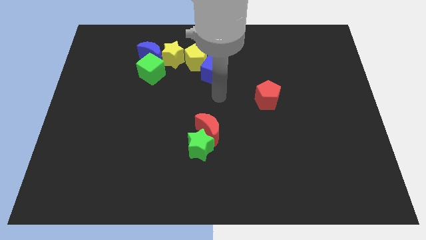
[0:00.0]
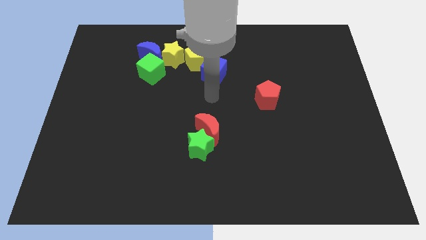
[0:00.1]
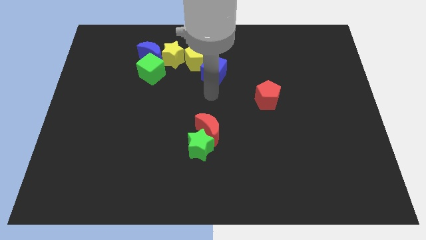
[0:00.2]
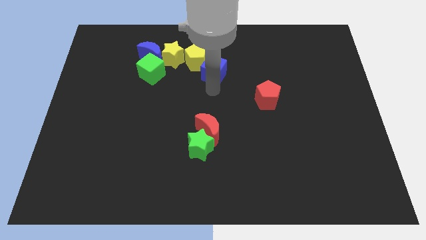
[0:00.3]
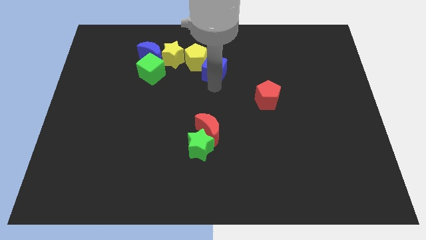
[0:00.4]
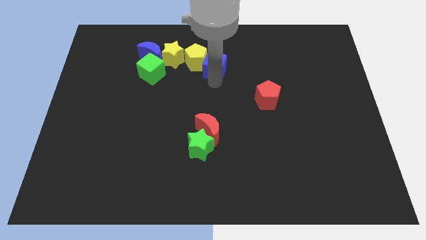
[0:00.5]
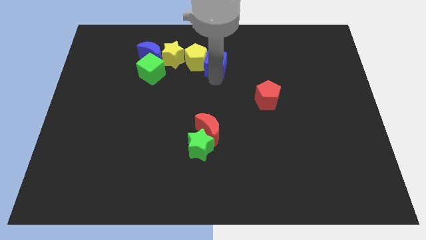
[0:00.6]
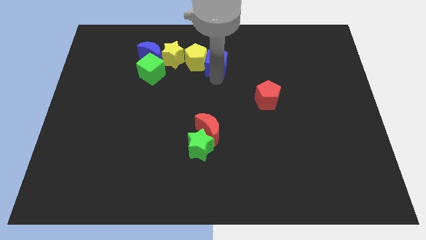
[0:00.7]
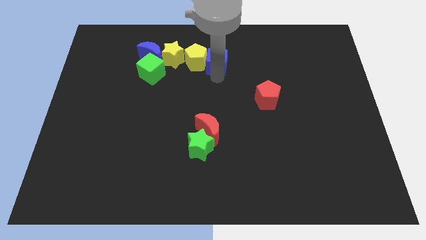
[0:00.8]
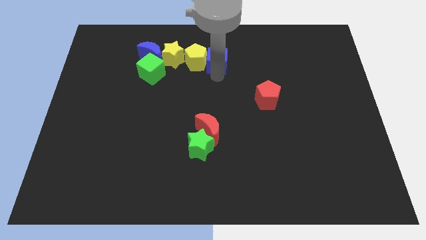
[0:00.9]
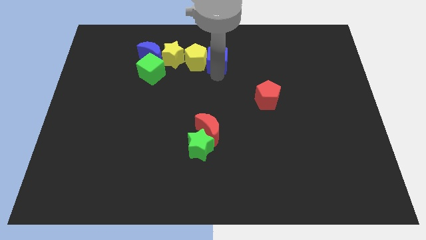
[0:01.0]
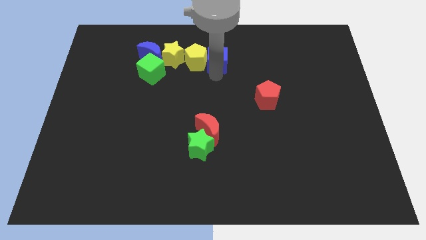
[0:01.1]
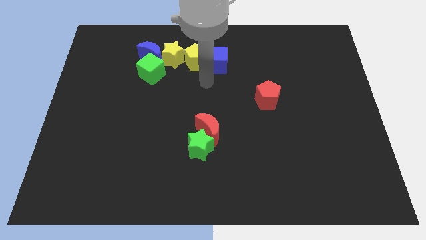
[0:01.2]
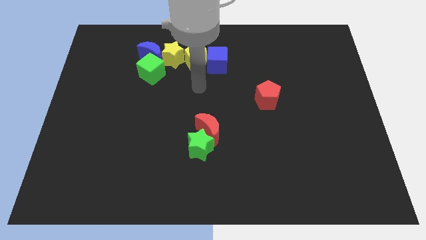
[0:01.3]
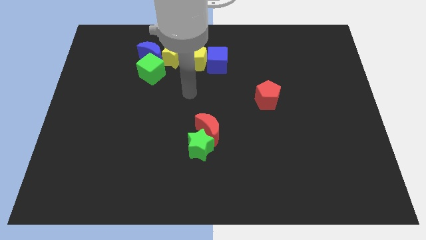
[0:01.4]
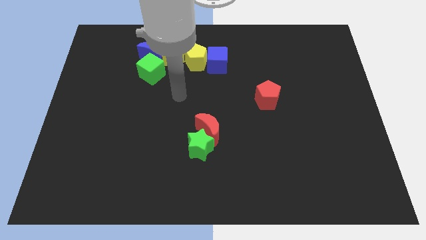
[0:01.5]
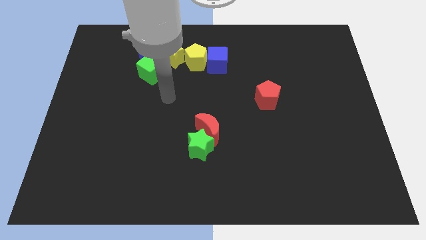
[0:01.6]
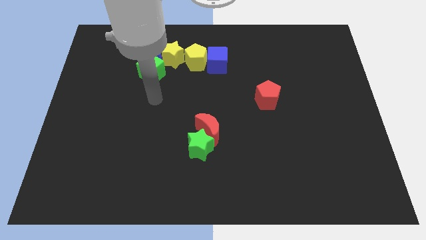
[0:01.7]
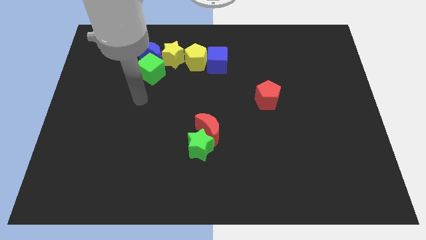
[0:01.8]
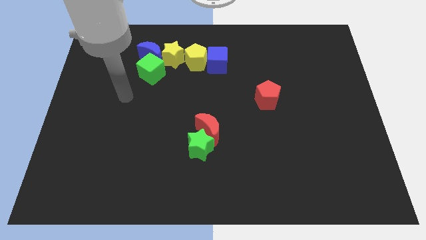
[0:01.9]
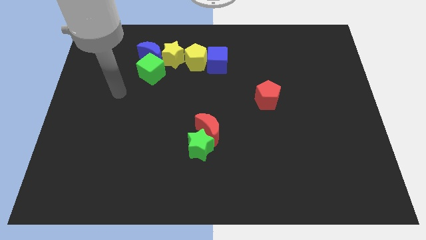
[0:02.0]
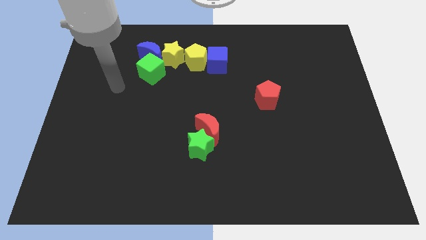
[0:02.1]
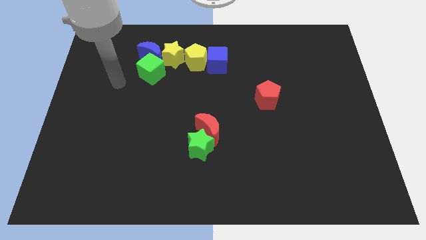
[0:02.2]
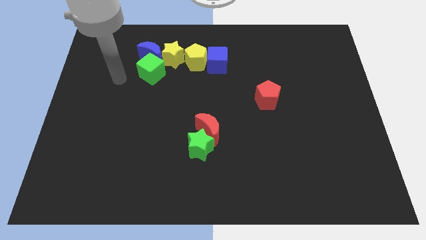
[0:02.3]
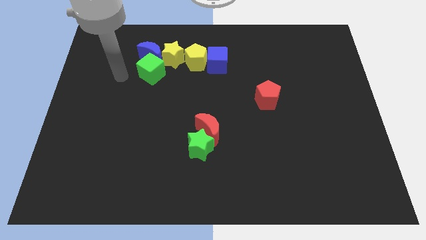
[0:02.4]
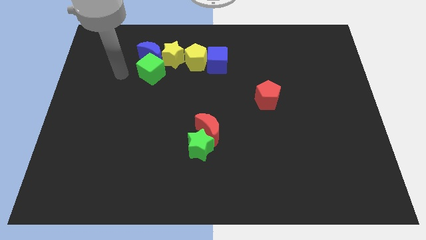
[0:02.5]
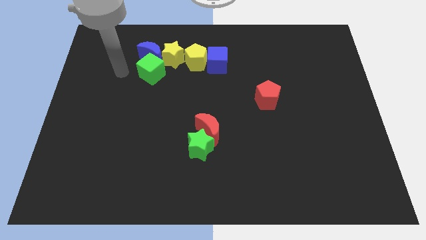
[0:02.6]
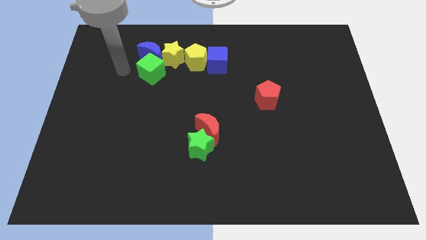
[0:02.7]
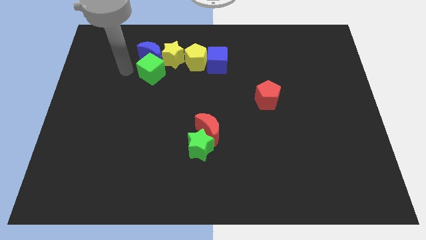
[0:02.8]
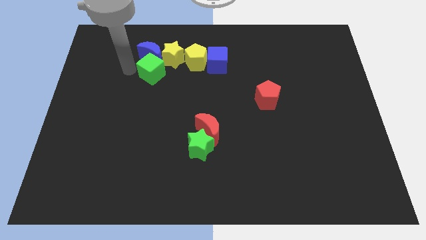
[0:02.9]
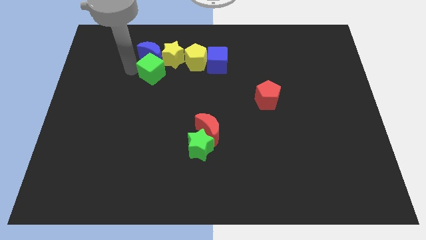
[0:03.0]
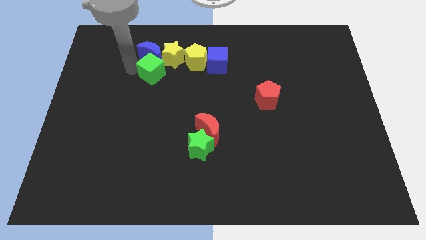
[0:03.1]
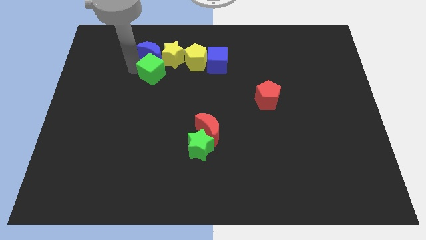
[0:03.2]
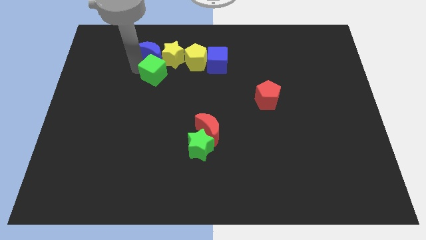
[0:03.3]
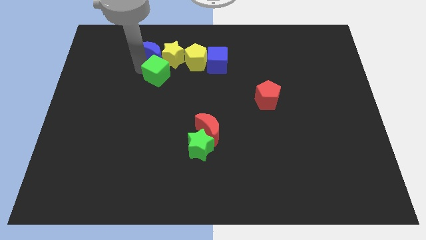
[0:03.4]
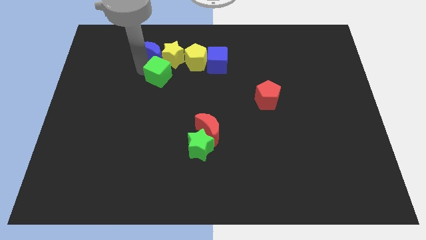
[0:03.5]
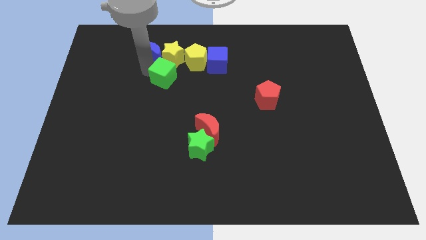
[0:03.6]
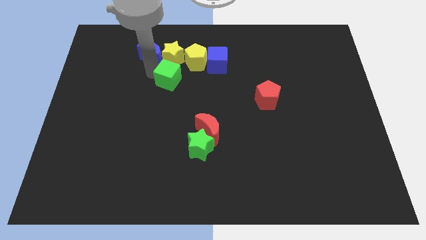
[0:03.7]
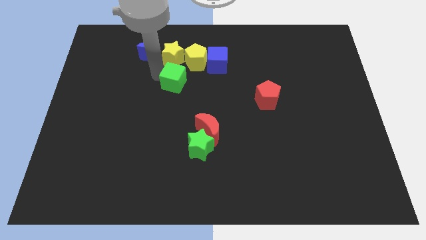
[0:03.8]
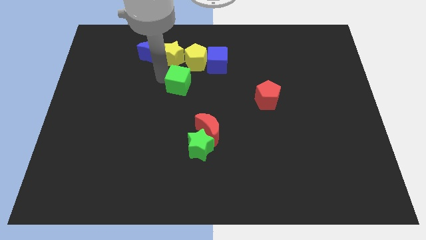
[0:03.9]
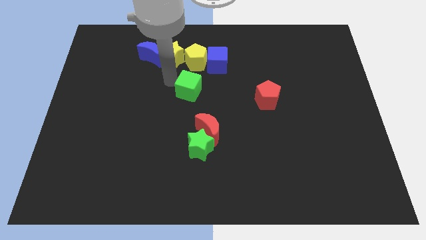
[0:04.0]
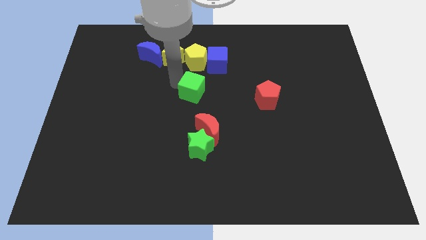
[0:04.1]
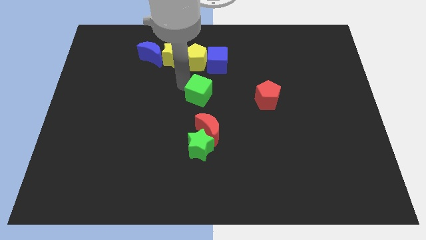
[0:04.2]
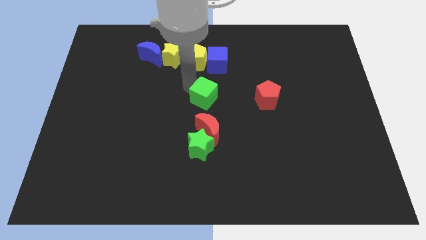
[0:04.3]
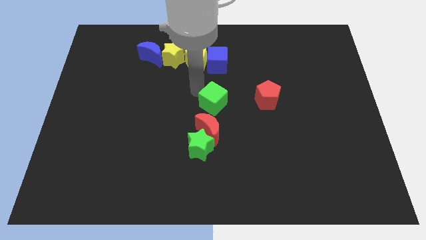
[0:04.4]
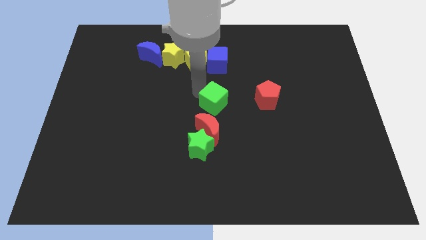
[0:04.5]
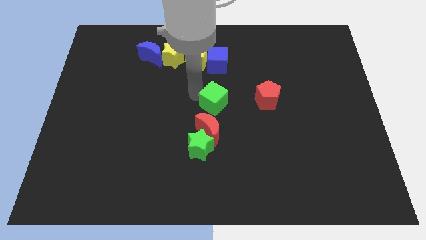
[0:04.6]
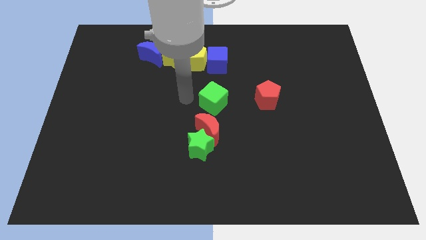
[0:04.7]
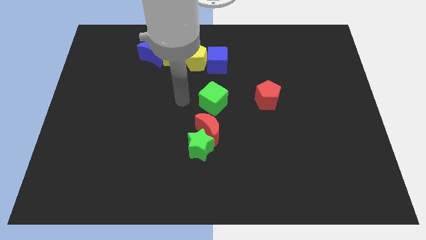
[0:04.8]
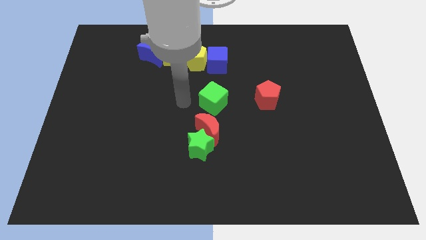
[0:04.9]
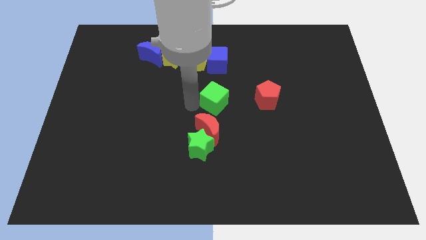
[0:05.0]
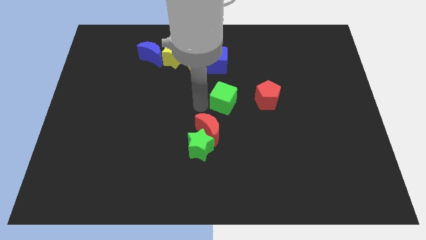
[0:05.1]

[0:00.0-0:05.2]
move the green cube away from the blue crescent

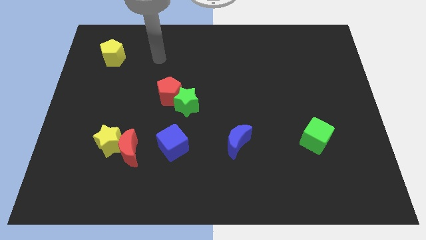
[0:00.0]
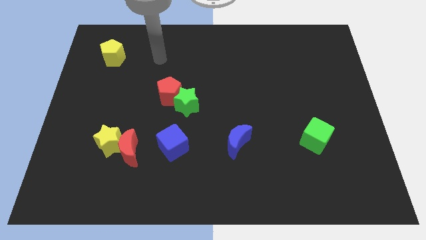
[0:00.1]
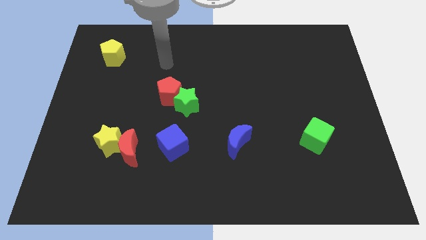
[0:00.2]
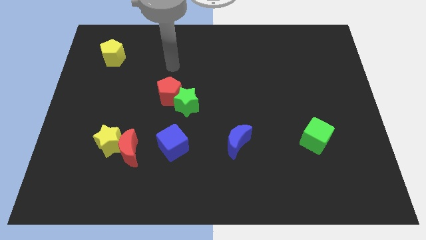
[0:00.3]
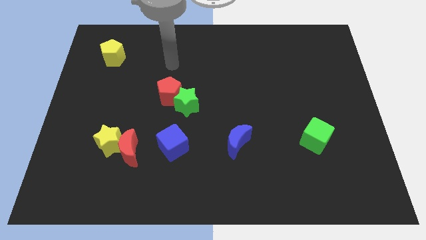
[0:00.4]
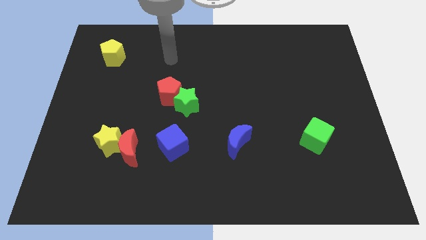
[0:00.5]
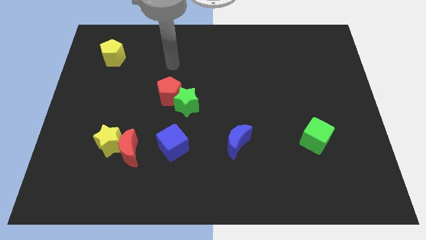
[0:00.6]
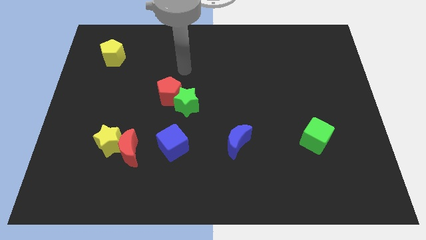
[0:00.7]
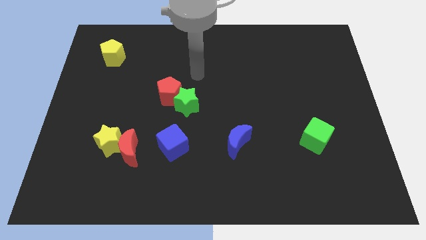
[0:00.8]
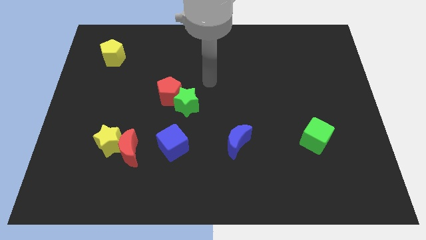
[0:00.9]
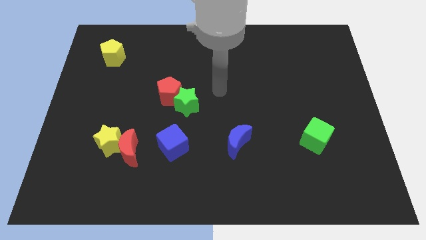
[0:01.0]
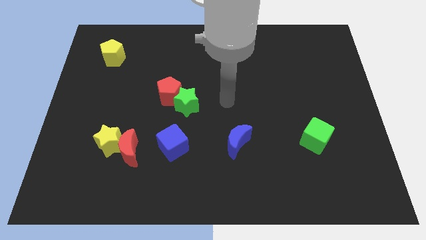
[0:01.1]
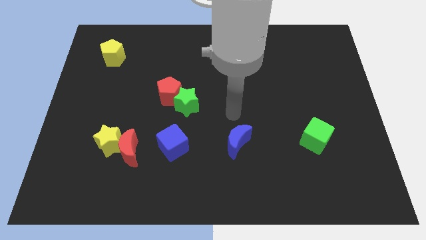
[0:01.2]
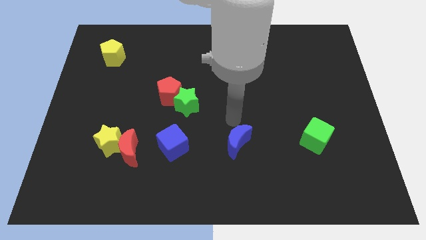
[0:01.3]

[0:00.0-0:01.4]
move your arm close to the blue moon

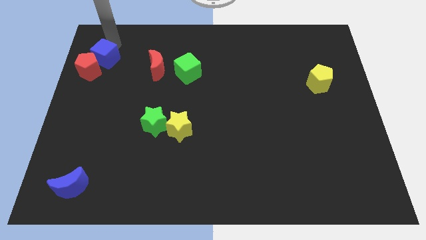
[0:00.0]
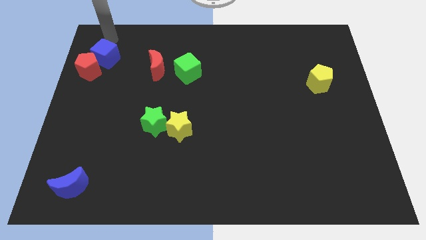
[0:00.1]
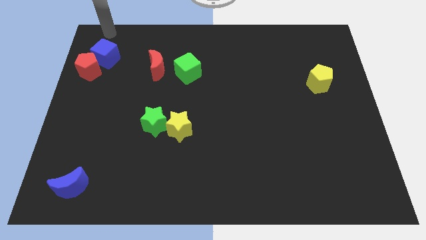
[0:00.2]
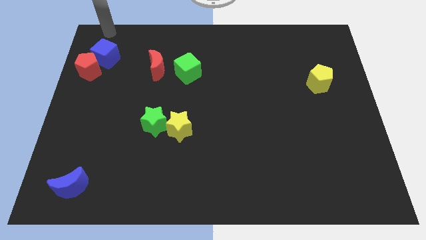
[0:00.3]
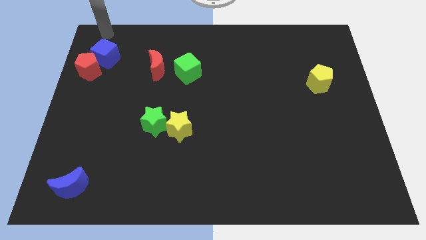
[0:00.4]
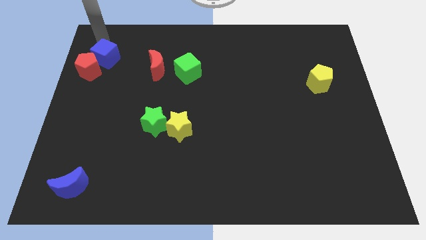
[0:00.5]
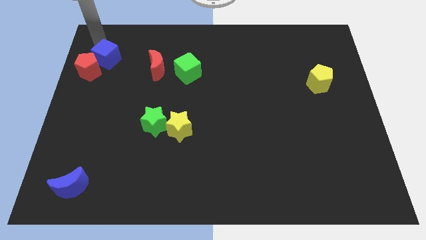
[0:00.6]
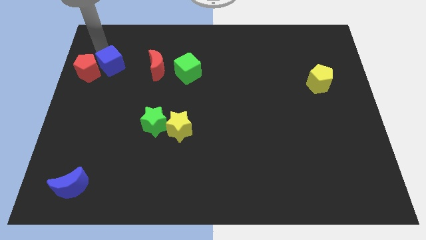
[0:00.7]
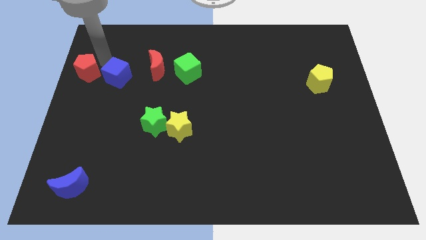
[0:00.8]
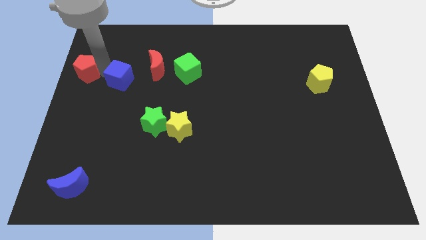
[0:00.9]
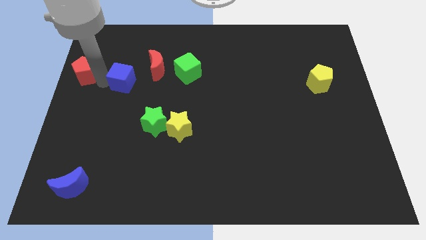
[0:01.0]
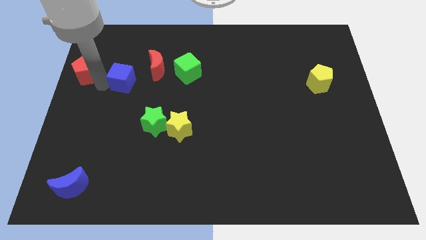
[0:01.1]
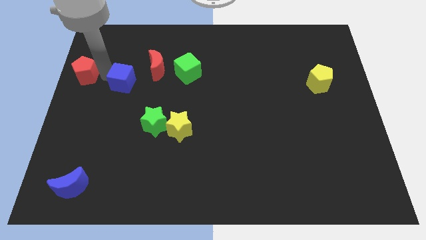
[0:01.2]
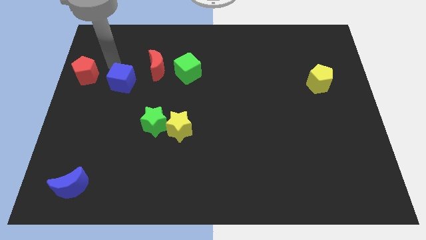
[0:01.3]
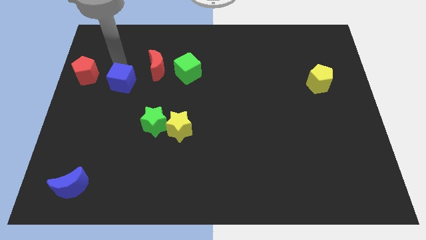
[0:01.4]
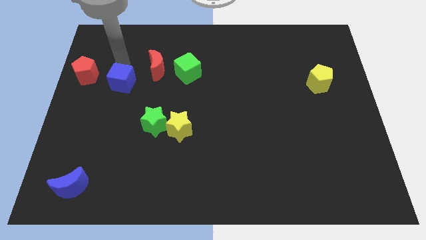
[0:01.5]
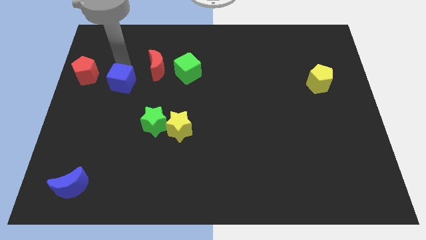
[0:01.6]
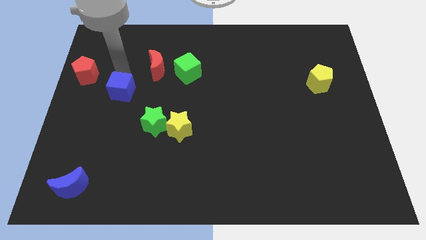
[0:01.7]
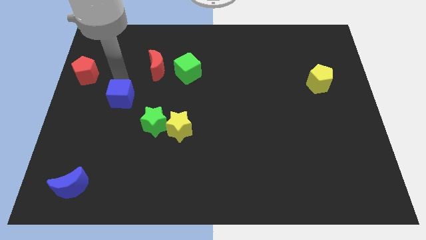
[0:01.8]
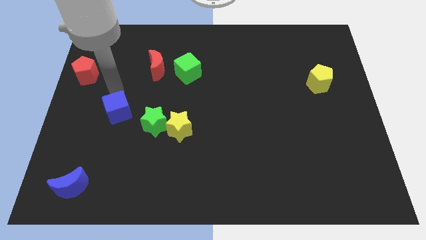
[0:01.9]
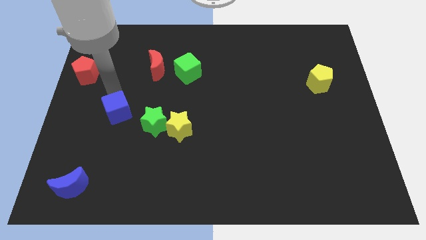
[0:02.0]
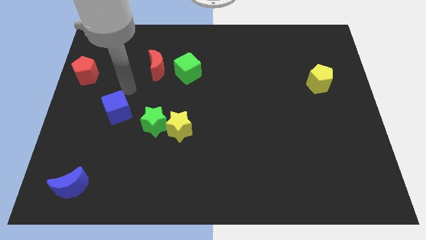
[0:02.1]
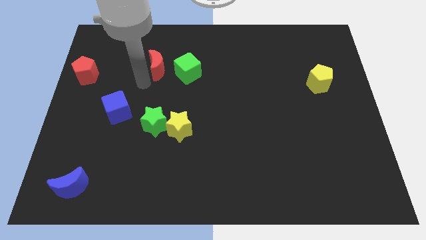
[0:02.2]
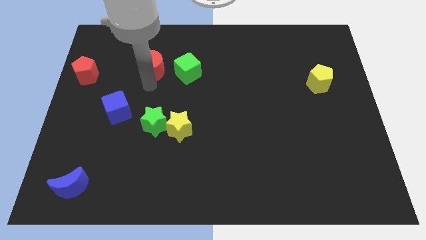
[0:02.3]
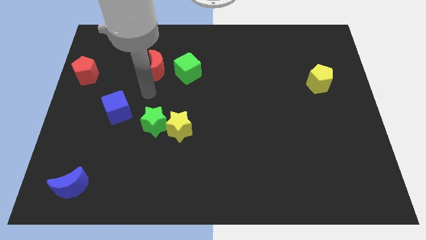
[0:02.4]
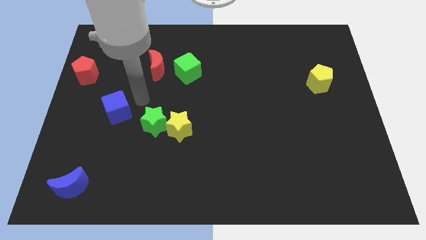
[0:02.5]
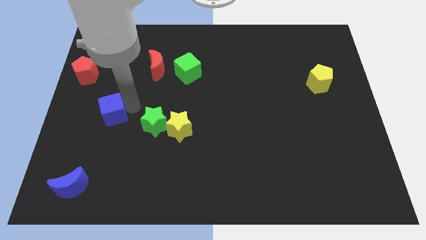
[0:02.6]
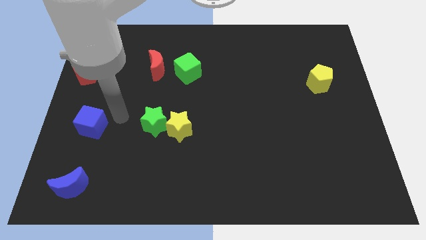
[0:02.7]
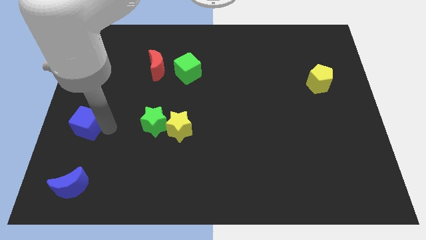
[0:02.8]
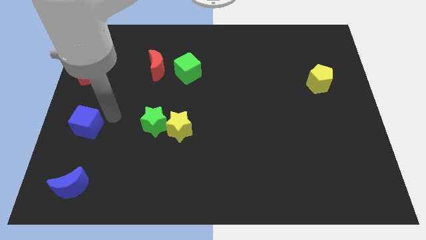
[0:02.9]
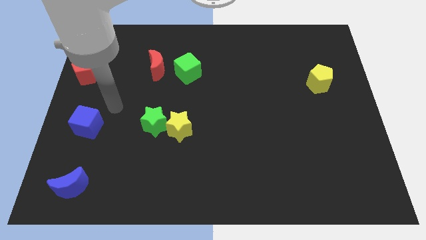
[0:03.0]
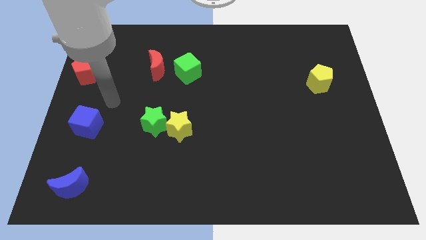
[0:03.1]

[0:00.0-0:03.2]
place the blue cube vertical to the red pentagon
